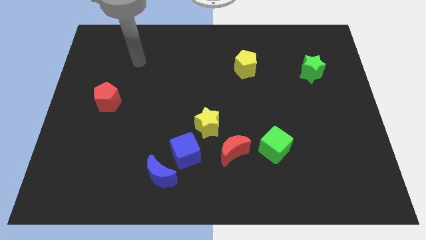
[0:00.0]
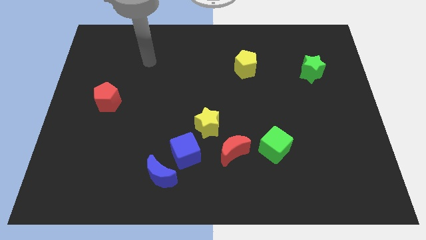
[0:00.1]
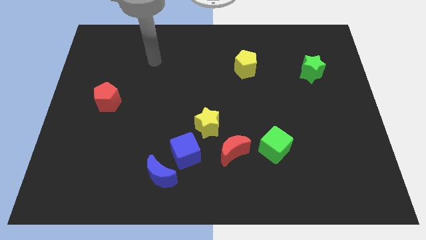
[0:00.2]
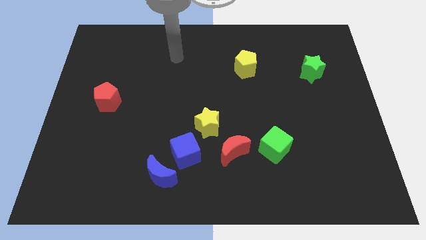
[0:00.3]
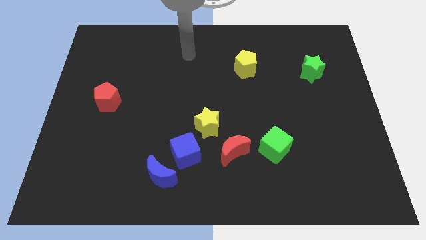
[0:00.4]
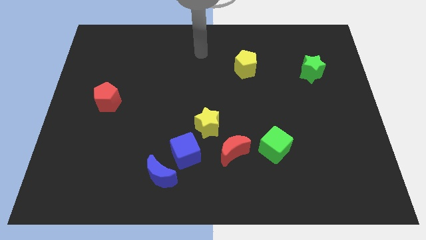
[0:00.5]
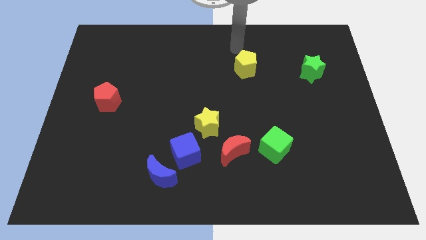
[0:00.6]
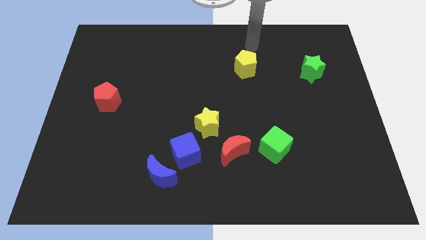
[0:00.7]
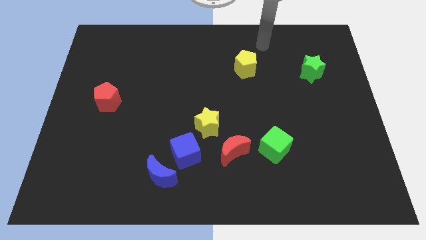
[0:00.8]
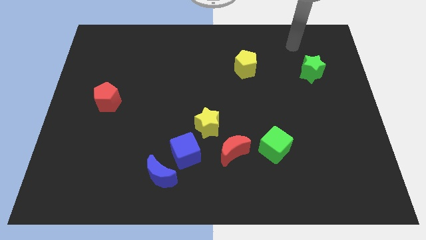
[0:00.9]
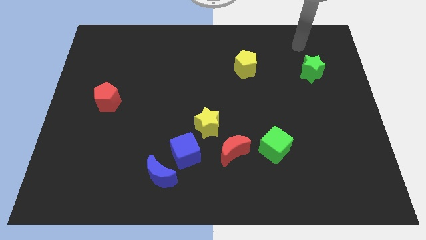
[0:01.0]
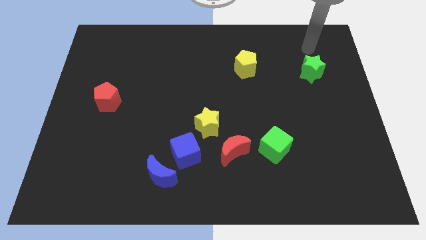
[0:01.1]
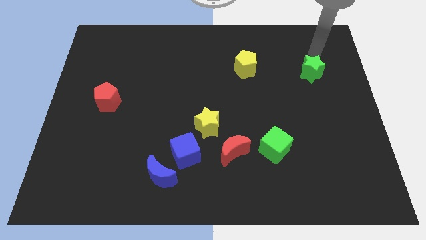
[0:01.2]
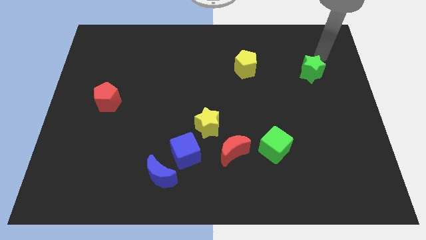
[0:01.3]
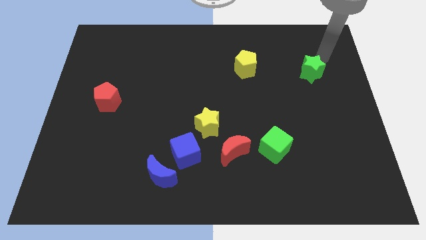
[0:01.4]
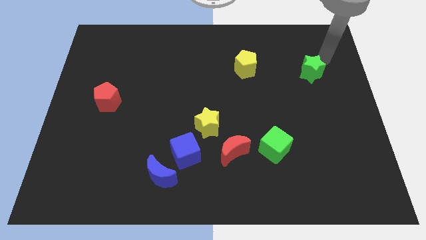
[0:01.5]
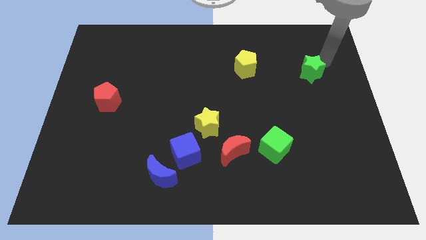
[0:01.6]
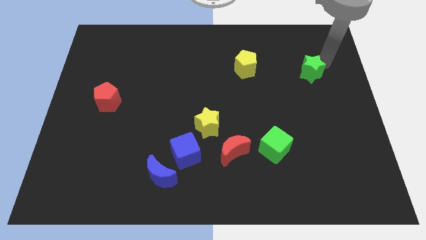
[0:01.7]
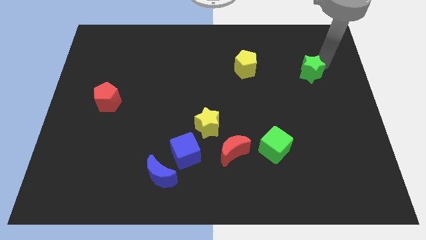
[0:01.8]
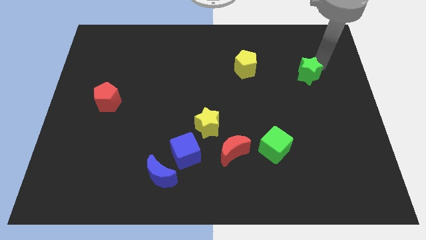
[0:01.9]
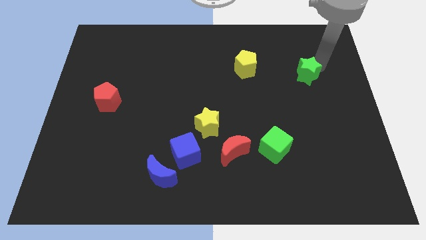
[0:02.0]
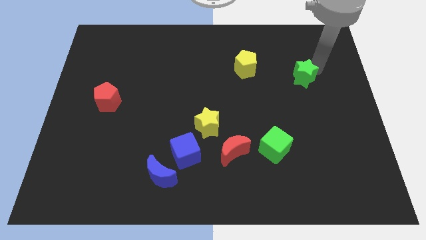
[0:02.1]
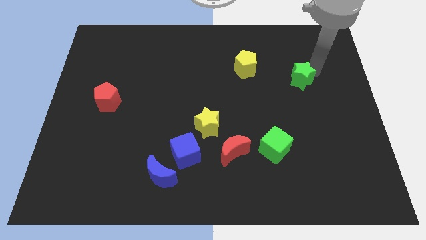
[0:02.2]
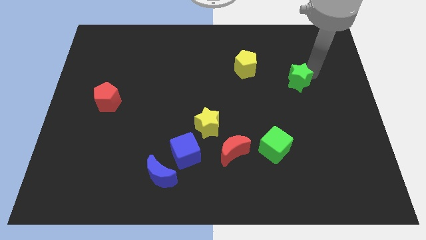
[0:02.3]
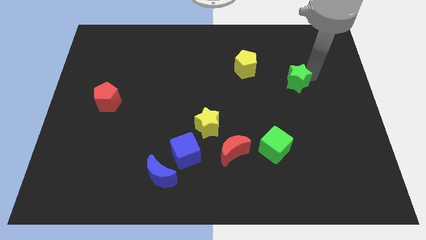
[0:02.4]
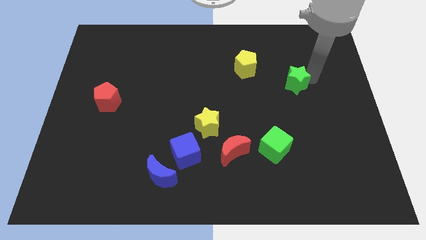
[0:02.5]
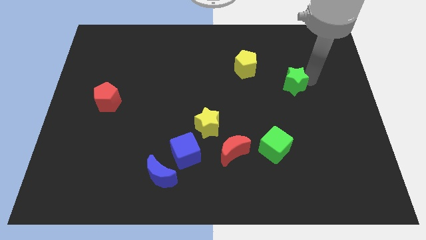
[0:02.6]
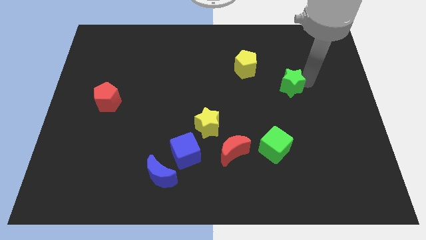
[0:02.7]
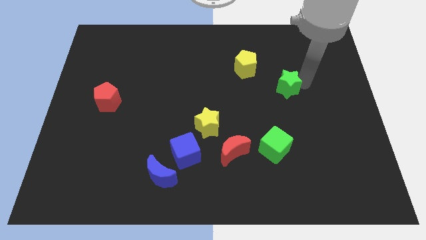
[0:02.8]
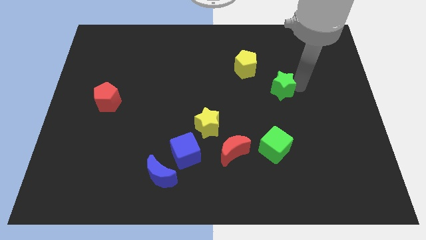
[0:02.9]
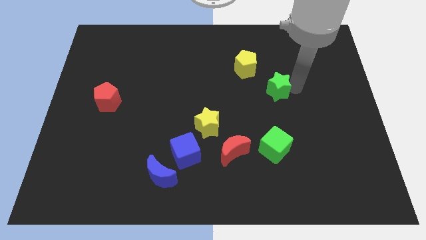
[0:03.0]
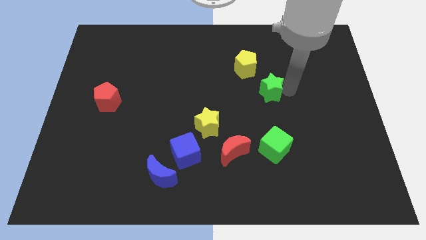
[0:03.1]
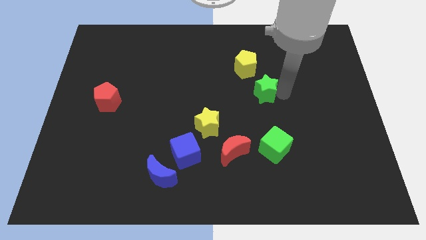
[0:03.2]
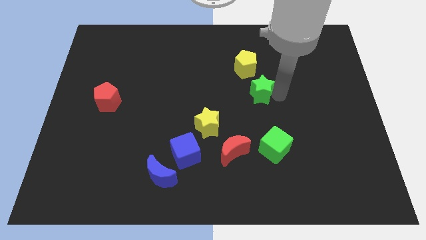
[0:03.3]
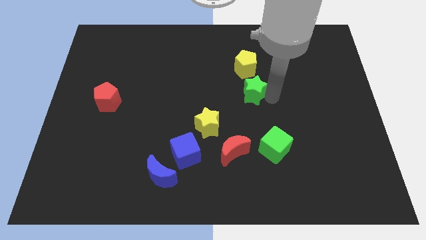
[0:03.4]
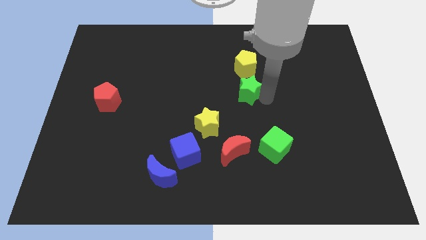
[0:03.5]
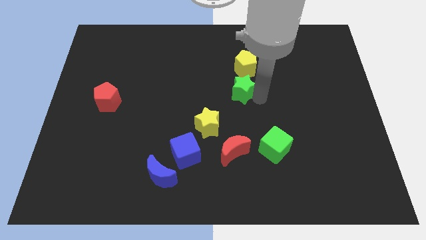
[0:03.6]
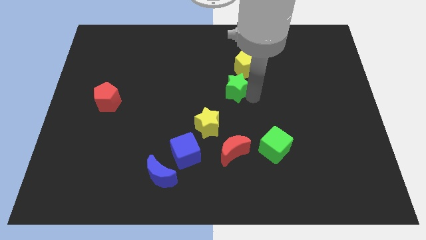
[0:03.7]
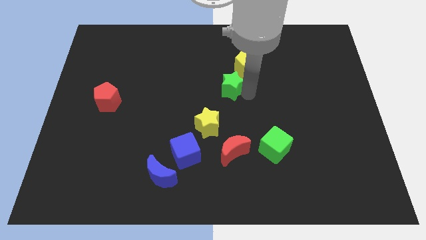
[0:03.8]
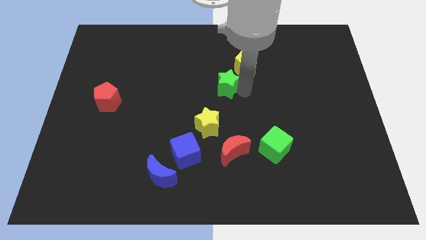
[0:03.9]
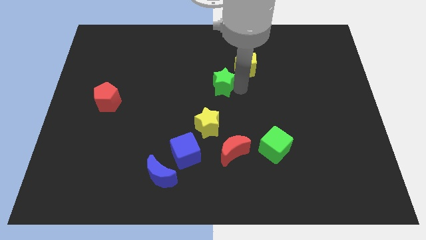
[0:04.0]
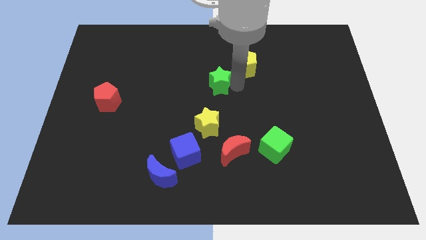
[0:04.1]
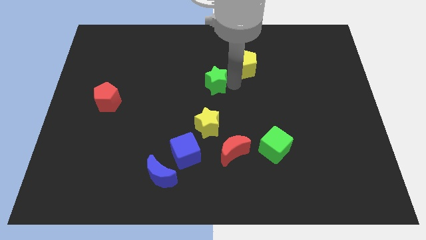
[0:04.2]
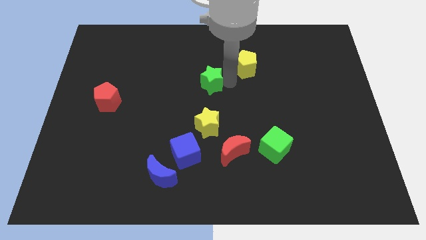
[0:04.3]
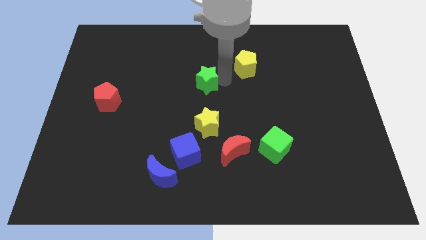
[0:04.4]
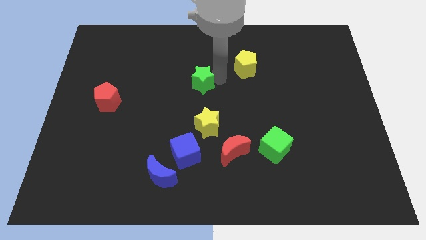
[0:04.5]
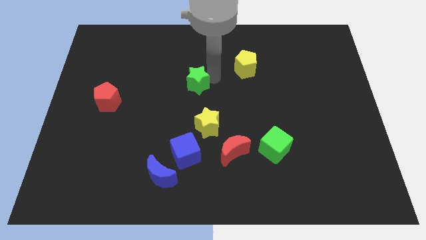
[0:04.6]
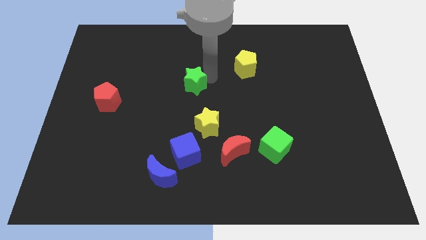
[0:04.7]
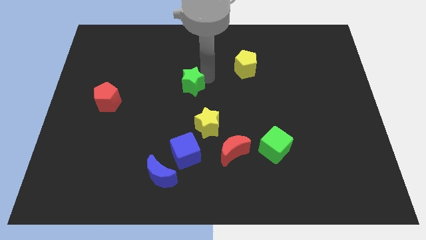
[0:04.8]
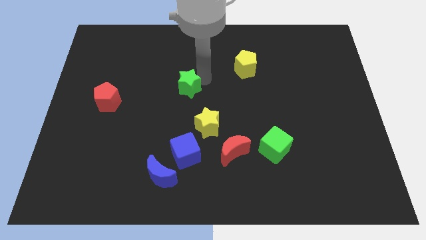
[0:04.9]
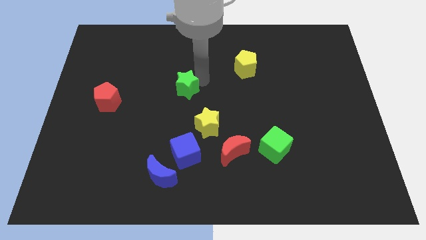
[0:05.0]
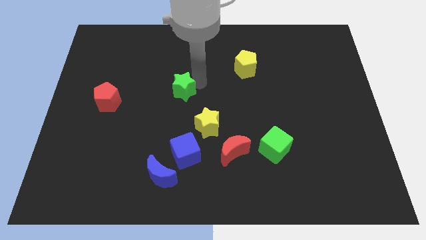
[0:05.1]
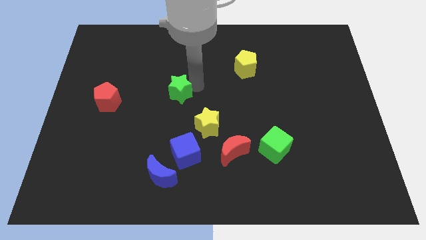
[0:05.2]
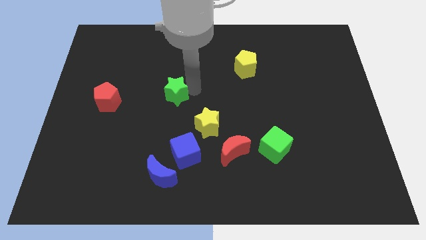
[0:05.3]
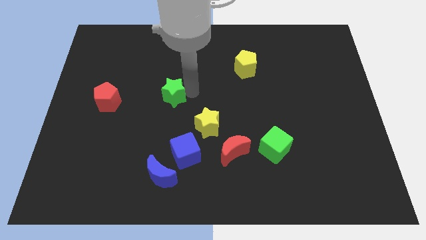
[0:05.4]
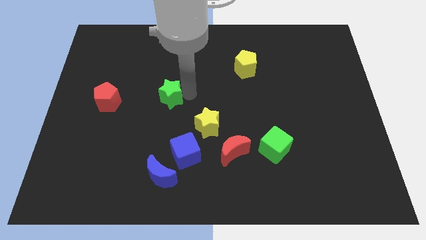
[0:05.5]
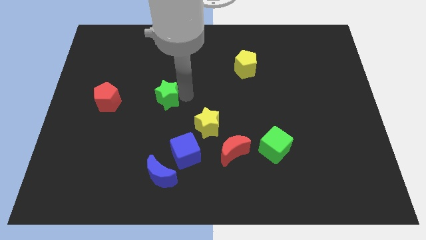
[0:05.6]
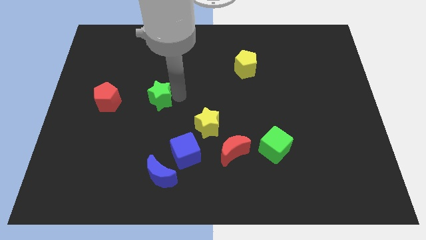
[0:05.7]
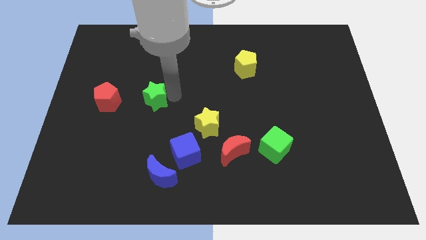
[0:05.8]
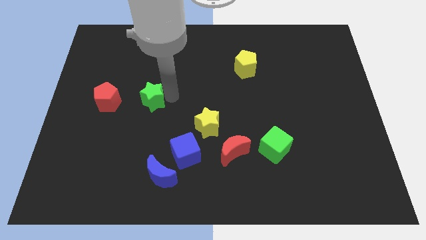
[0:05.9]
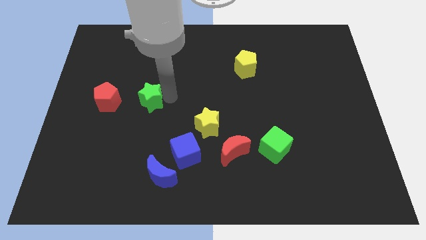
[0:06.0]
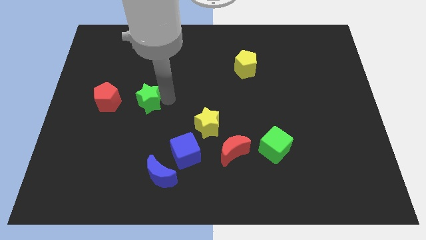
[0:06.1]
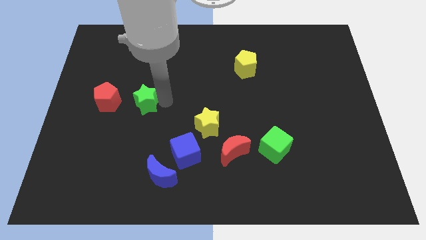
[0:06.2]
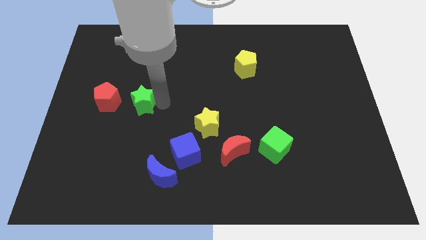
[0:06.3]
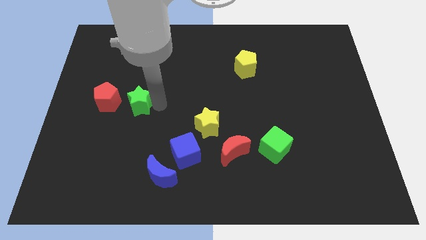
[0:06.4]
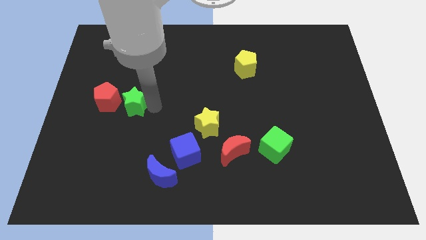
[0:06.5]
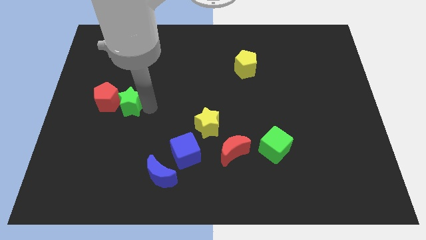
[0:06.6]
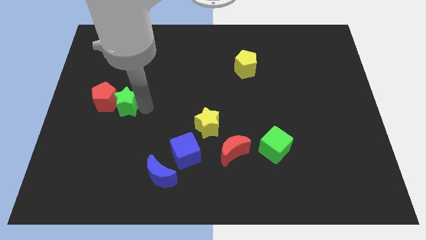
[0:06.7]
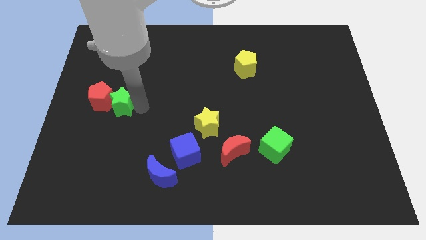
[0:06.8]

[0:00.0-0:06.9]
move the green star next to the red pentagon

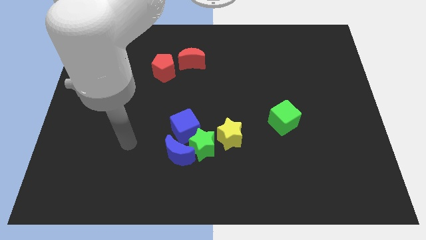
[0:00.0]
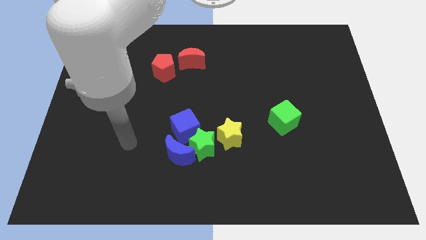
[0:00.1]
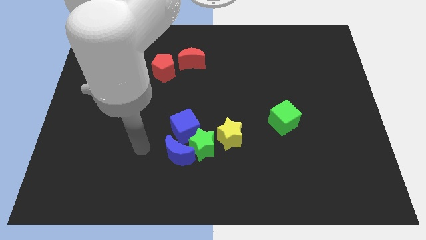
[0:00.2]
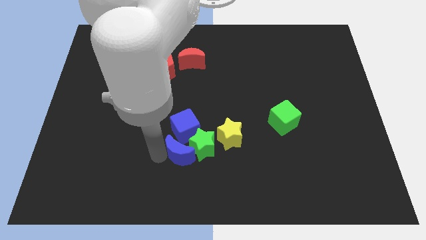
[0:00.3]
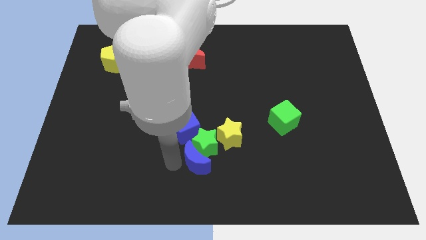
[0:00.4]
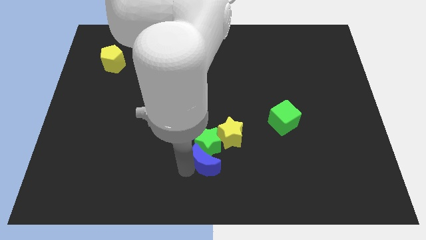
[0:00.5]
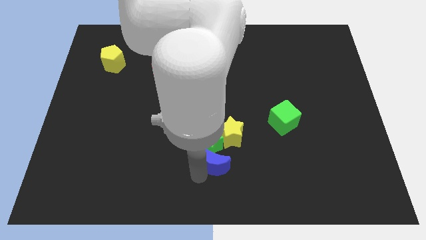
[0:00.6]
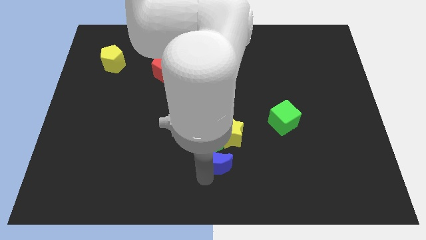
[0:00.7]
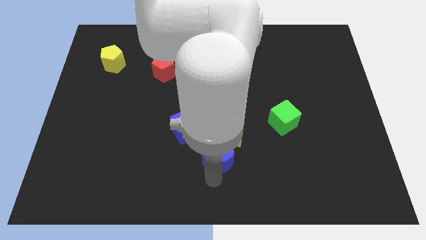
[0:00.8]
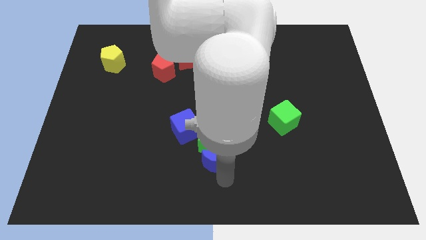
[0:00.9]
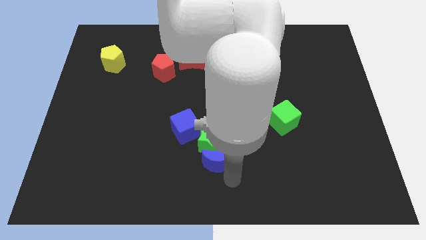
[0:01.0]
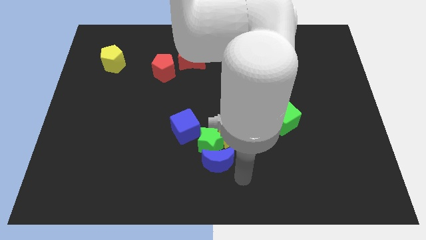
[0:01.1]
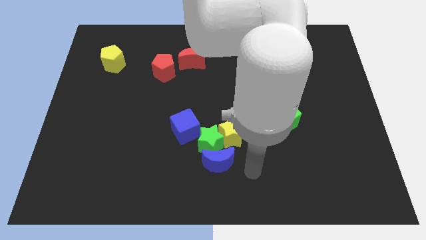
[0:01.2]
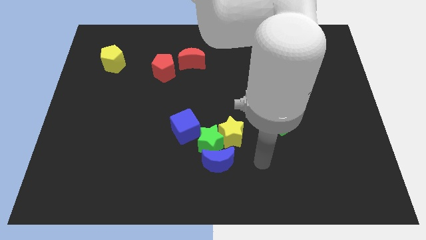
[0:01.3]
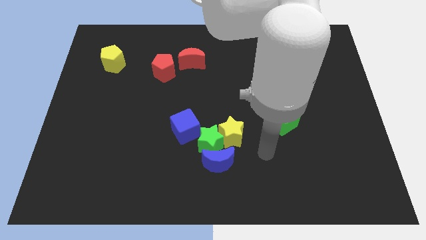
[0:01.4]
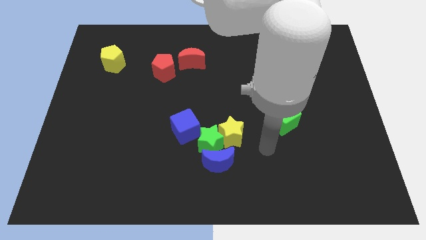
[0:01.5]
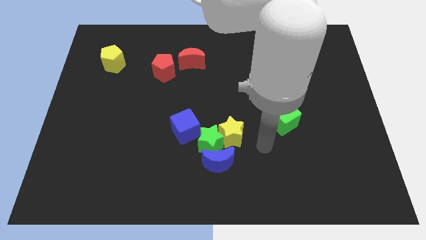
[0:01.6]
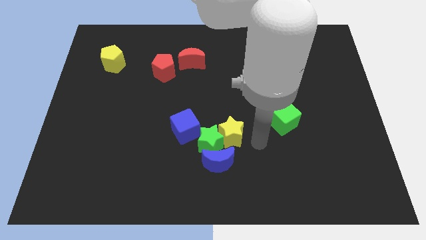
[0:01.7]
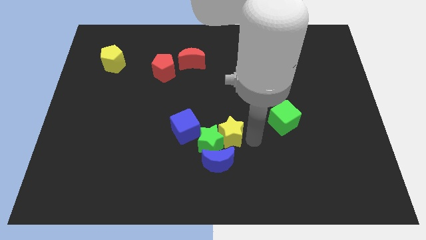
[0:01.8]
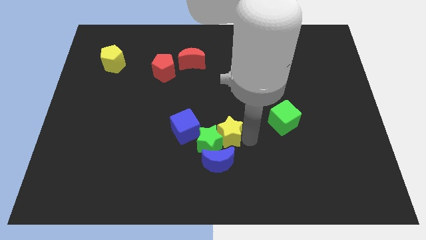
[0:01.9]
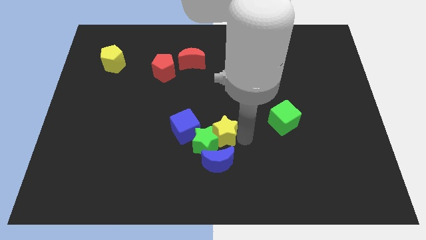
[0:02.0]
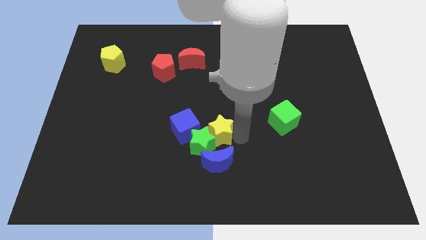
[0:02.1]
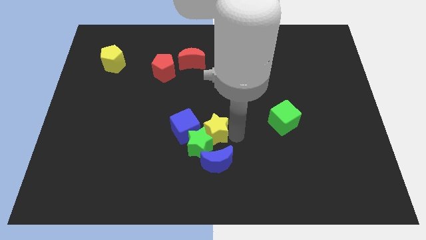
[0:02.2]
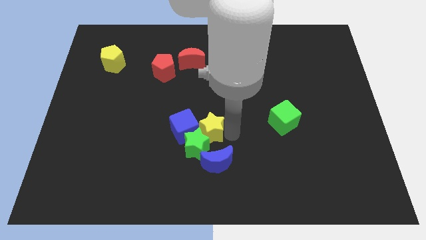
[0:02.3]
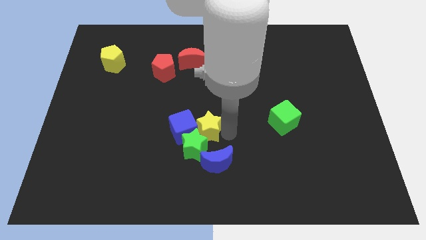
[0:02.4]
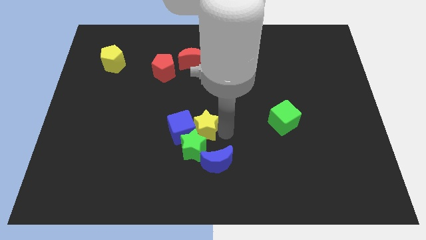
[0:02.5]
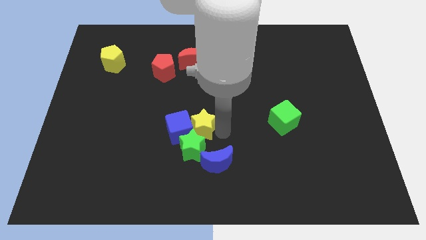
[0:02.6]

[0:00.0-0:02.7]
slide the yellow star towards the blue cube
